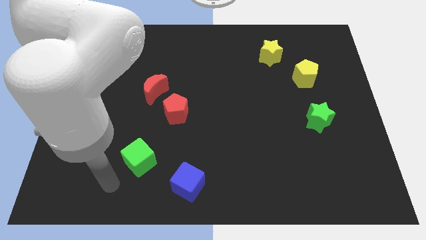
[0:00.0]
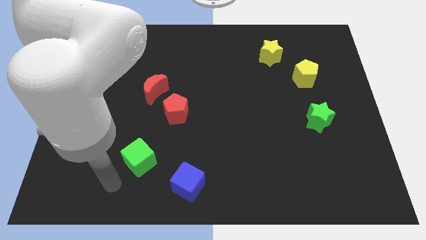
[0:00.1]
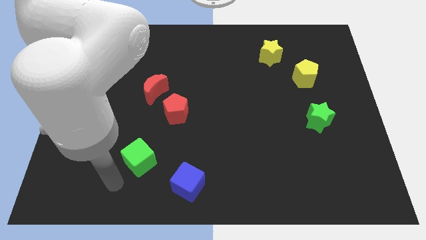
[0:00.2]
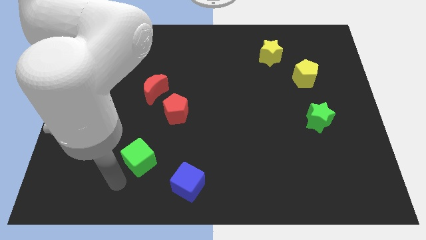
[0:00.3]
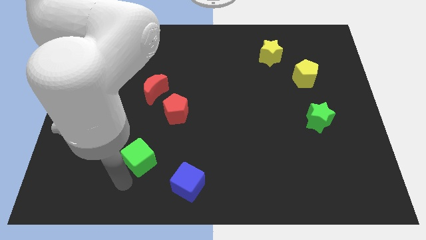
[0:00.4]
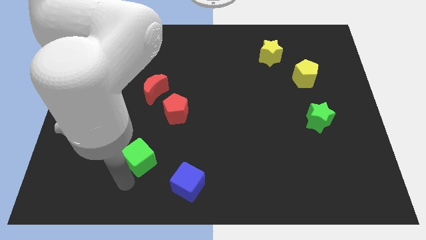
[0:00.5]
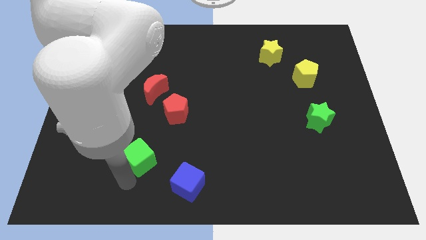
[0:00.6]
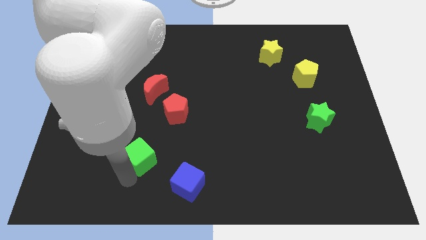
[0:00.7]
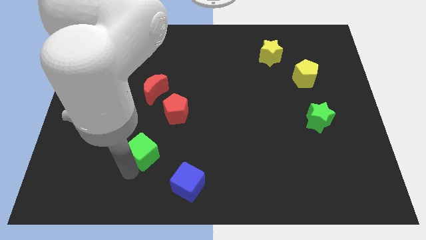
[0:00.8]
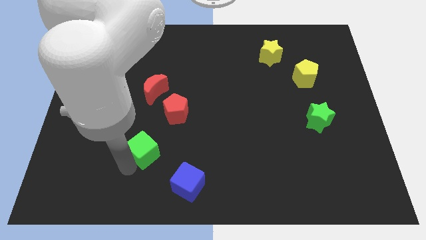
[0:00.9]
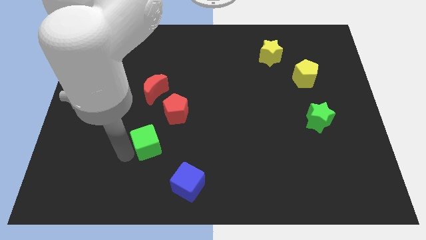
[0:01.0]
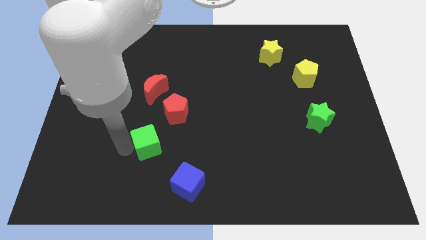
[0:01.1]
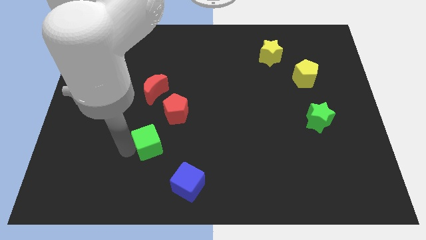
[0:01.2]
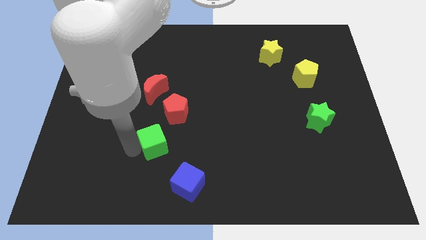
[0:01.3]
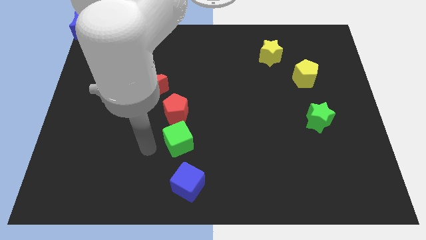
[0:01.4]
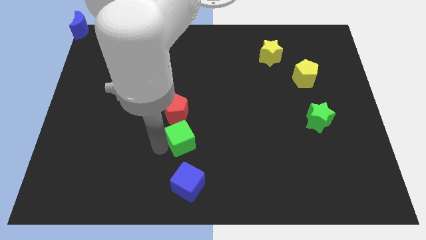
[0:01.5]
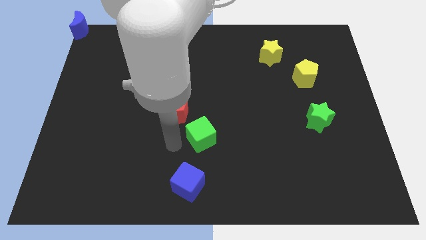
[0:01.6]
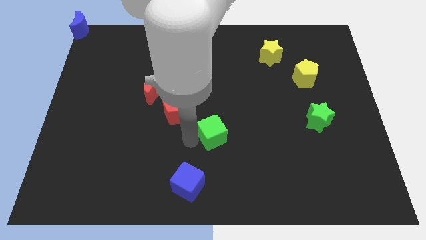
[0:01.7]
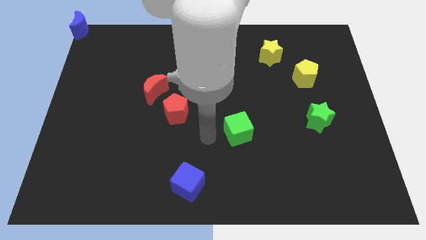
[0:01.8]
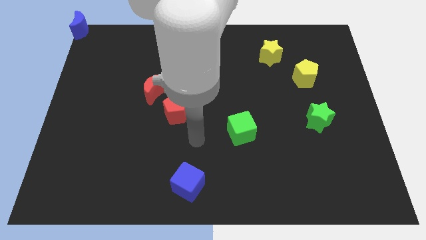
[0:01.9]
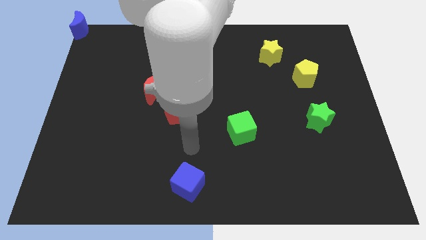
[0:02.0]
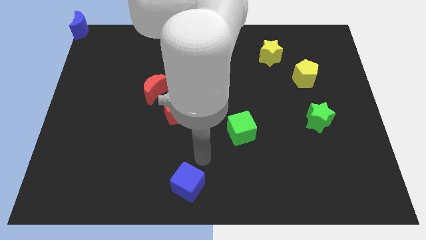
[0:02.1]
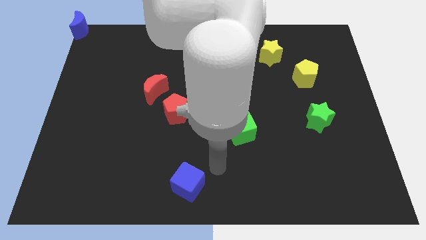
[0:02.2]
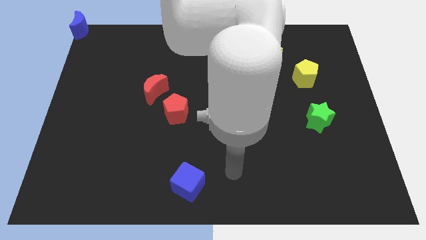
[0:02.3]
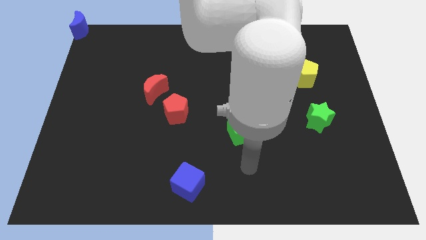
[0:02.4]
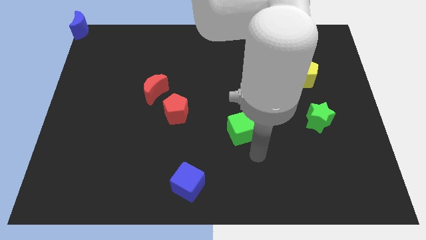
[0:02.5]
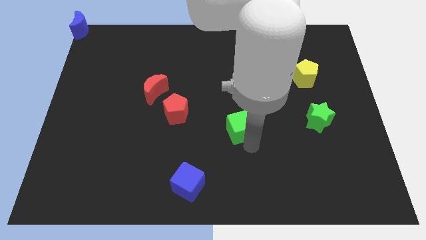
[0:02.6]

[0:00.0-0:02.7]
place green cube parallel to green star

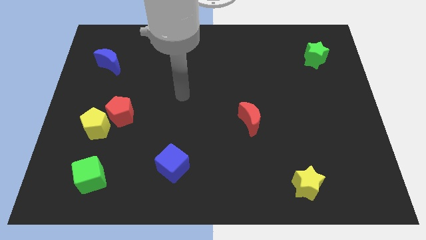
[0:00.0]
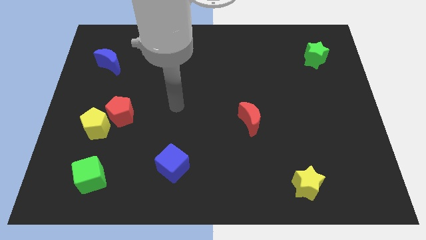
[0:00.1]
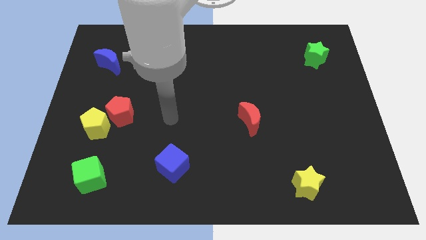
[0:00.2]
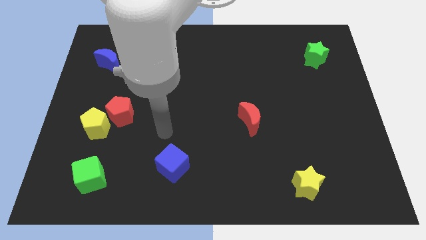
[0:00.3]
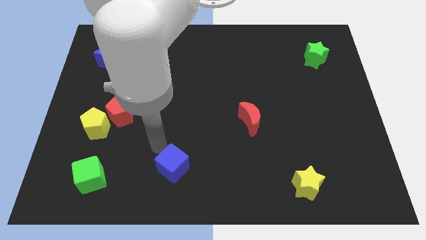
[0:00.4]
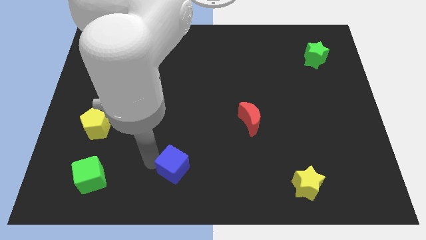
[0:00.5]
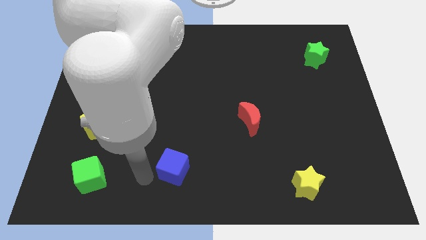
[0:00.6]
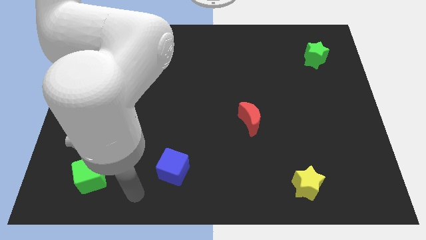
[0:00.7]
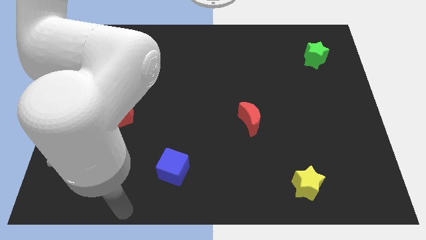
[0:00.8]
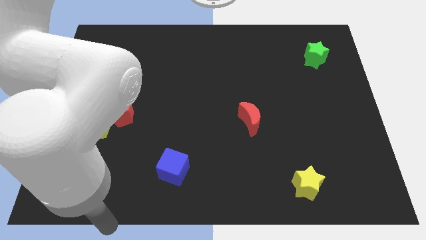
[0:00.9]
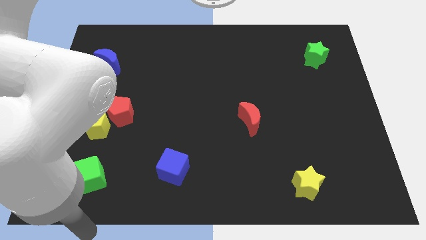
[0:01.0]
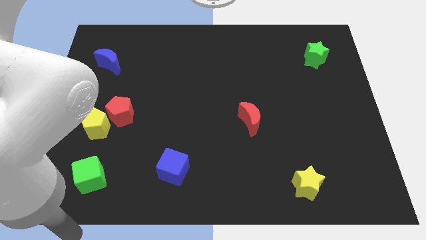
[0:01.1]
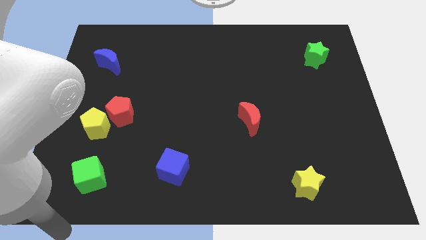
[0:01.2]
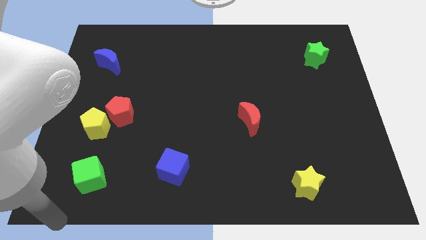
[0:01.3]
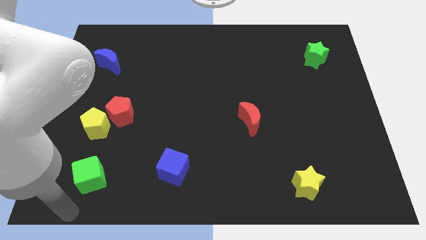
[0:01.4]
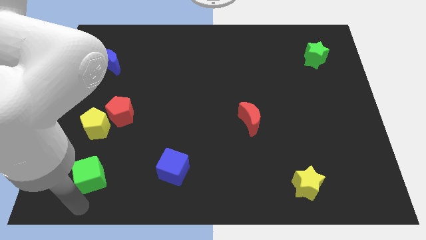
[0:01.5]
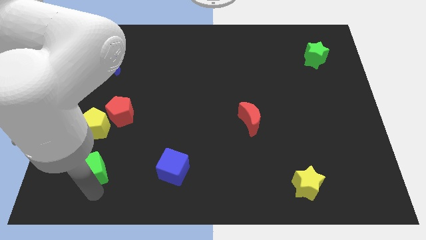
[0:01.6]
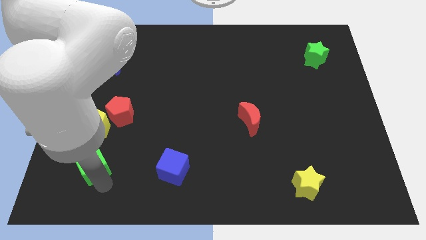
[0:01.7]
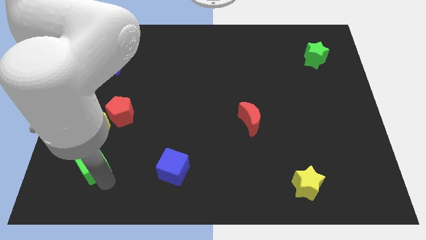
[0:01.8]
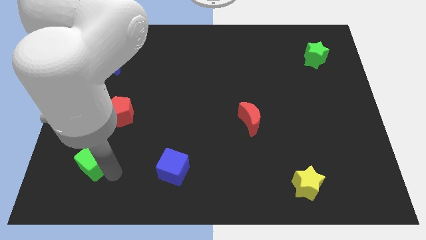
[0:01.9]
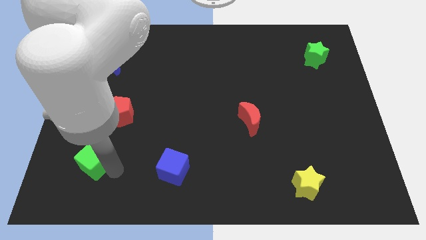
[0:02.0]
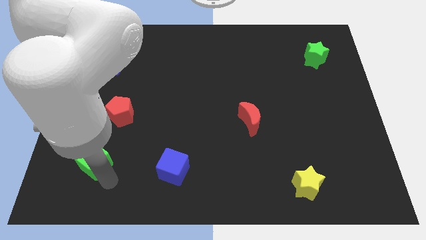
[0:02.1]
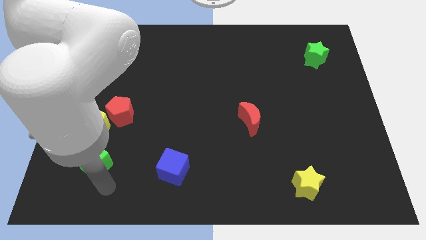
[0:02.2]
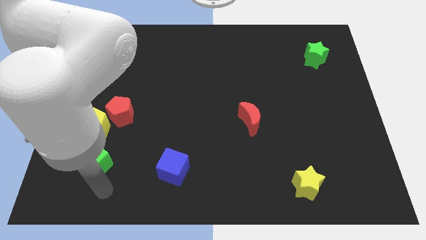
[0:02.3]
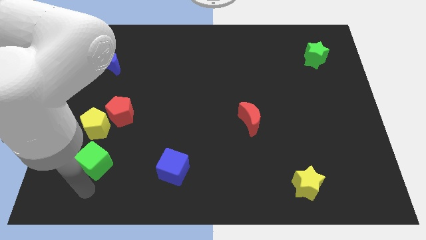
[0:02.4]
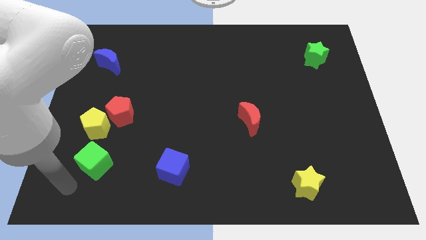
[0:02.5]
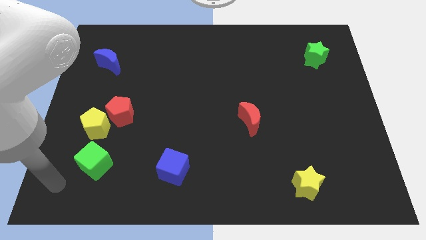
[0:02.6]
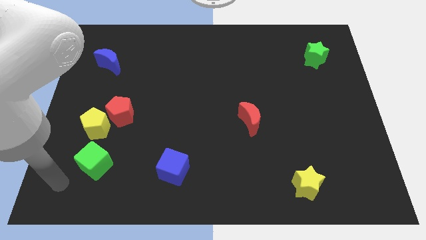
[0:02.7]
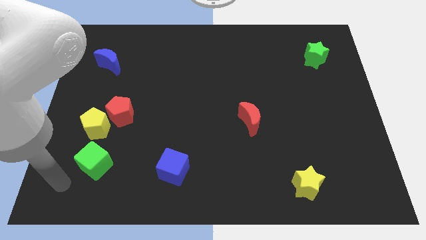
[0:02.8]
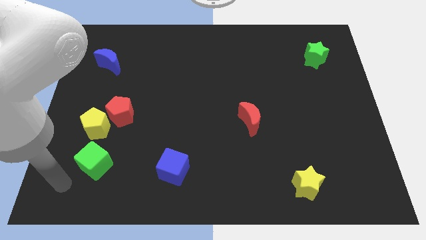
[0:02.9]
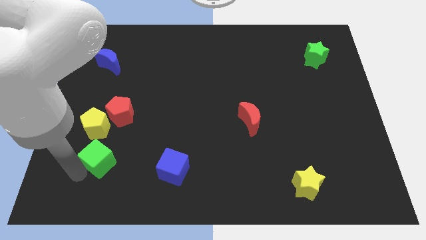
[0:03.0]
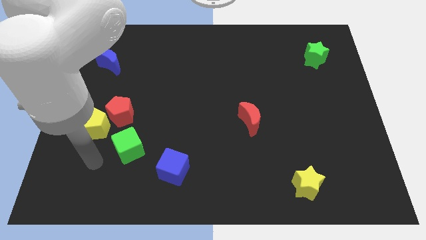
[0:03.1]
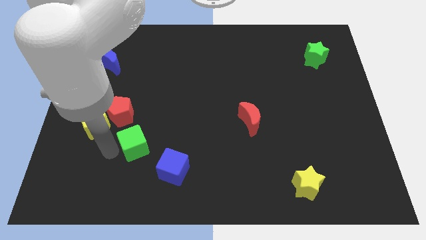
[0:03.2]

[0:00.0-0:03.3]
push the green cube slightly upwards

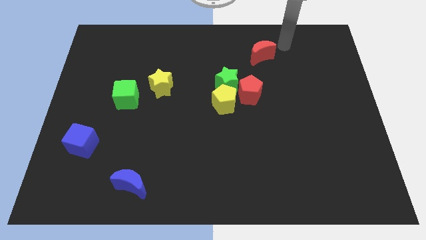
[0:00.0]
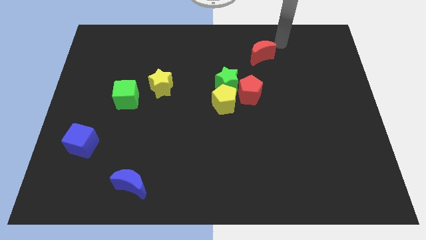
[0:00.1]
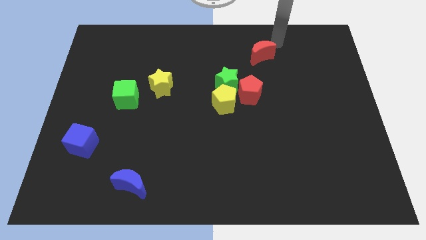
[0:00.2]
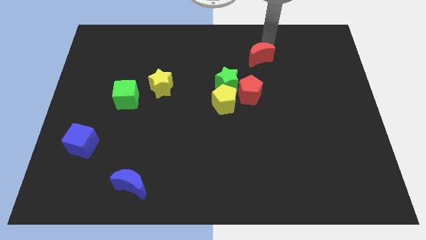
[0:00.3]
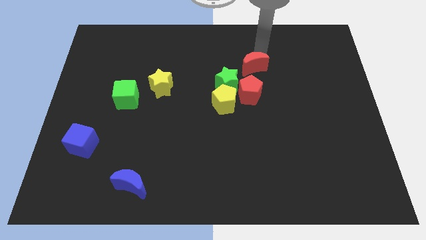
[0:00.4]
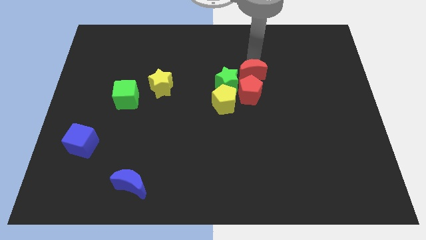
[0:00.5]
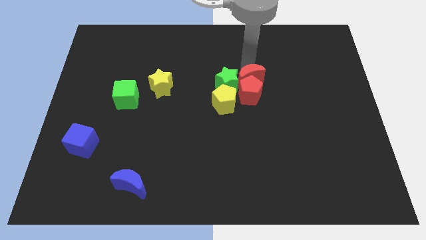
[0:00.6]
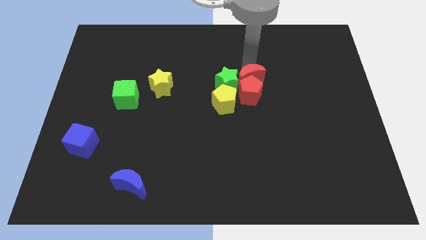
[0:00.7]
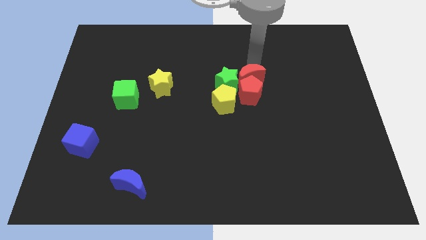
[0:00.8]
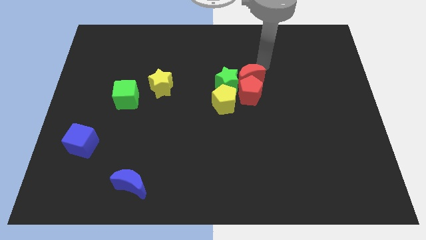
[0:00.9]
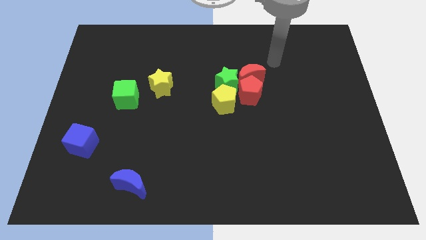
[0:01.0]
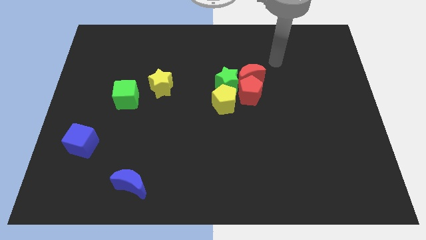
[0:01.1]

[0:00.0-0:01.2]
push the red crescent into the top side of the red pentagon

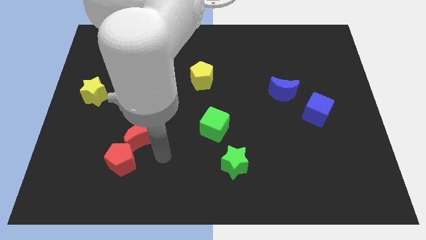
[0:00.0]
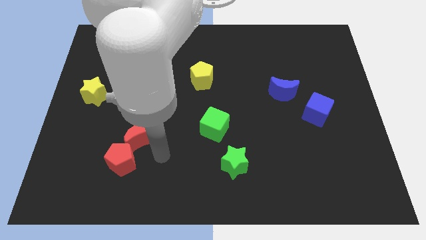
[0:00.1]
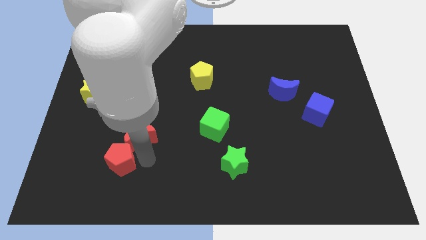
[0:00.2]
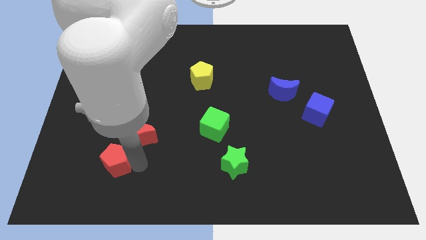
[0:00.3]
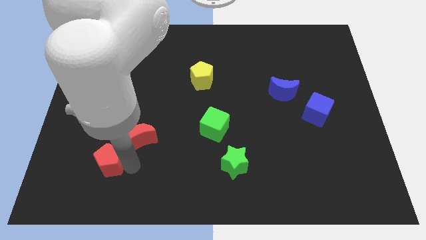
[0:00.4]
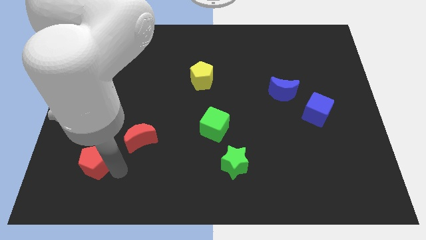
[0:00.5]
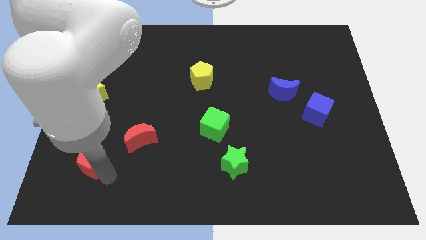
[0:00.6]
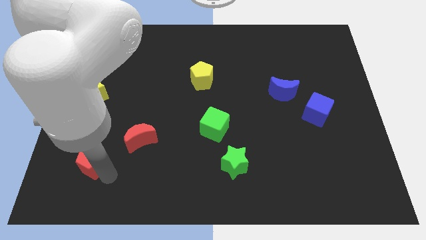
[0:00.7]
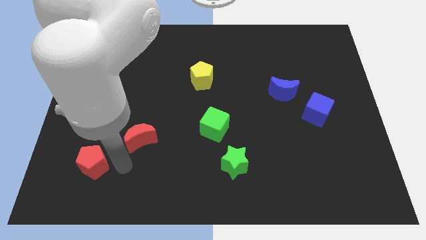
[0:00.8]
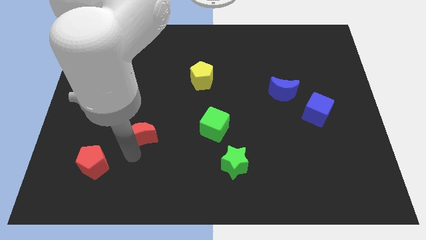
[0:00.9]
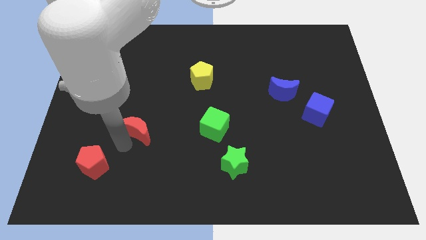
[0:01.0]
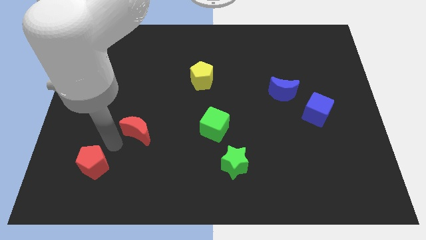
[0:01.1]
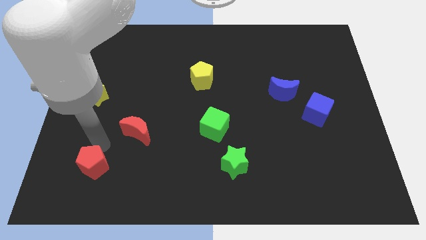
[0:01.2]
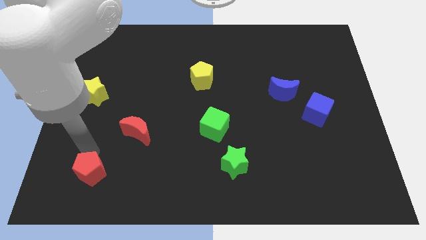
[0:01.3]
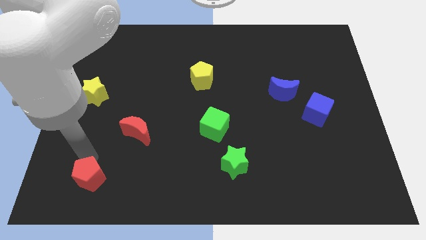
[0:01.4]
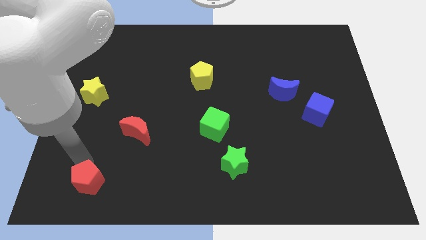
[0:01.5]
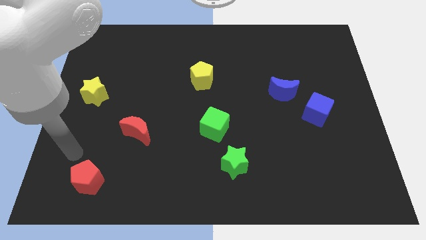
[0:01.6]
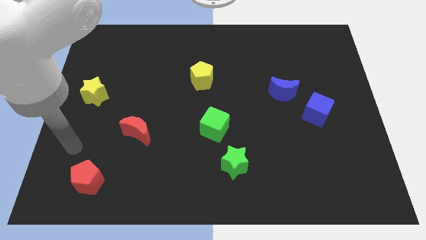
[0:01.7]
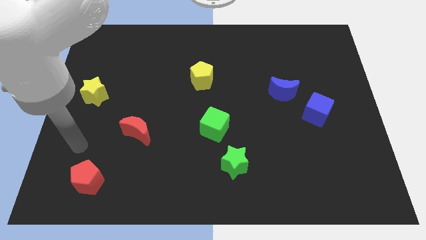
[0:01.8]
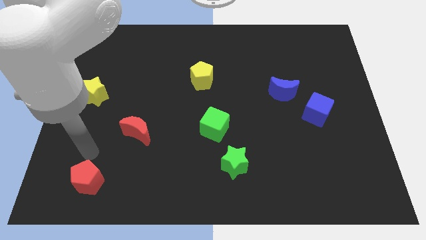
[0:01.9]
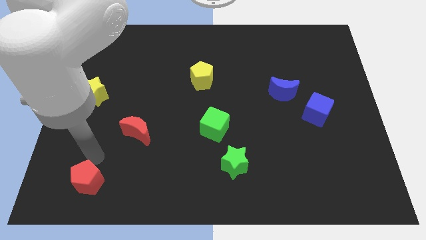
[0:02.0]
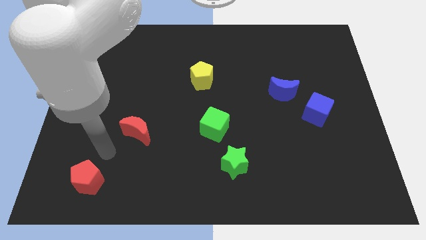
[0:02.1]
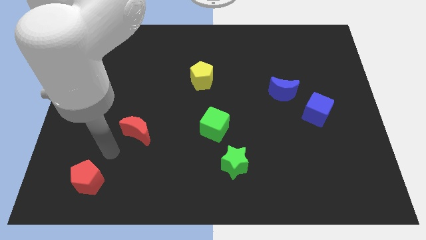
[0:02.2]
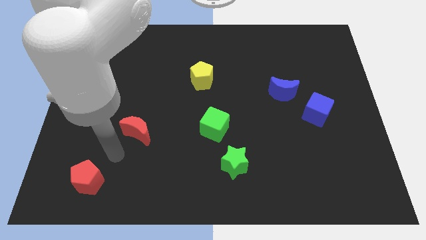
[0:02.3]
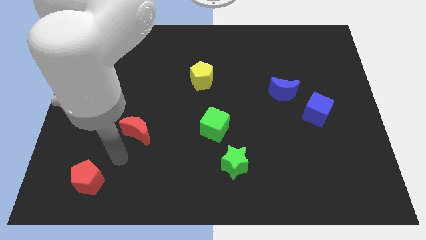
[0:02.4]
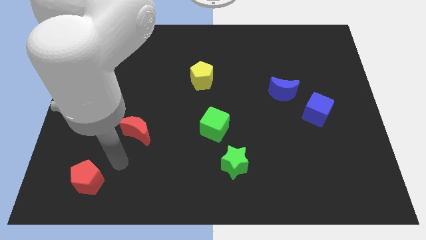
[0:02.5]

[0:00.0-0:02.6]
push the red pentagon away from the red moon
